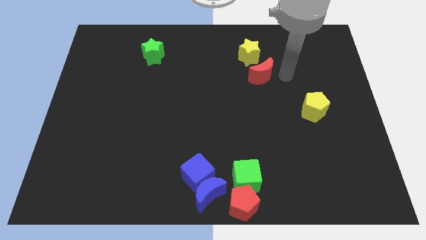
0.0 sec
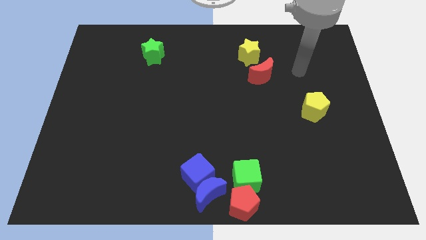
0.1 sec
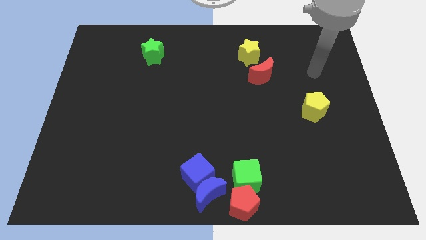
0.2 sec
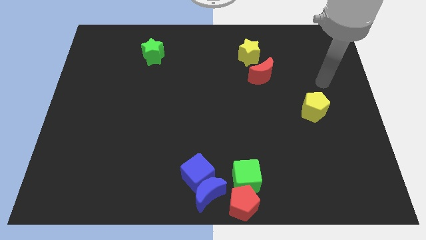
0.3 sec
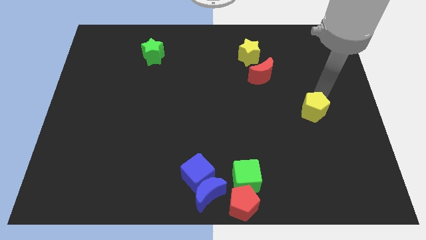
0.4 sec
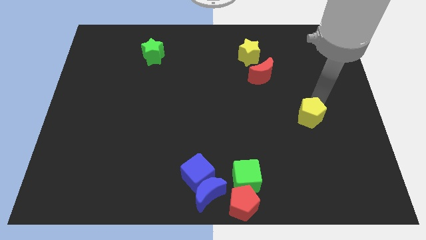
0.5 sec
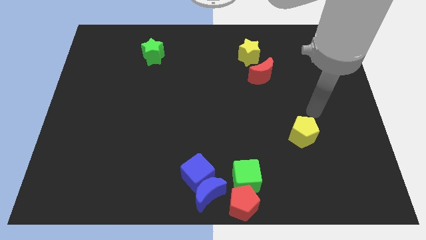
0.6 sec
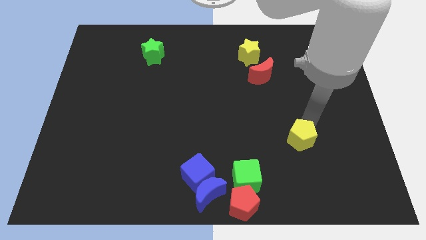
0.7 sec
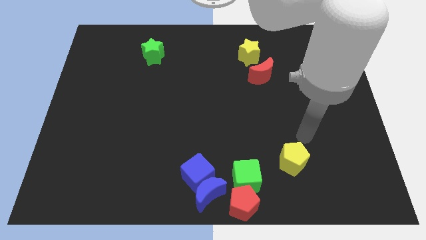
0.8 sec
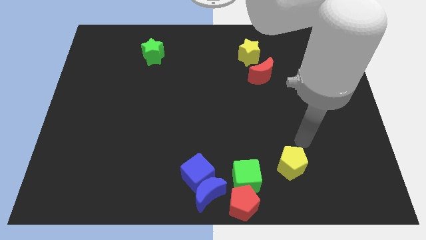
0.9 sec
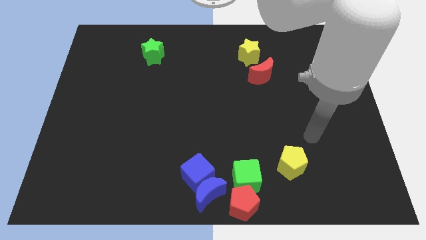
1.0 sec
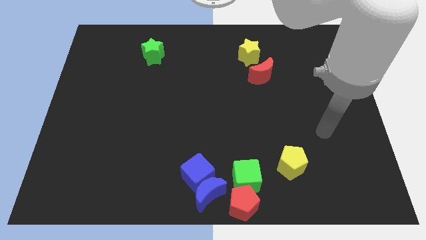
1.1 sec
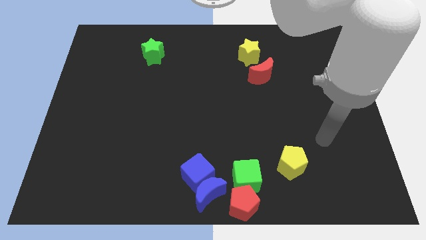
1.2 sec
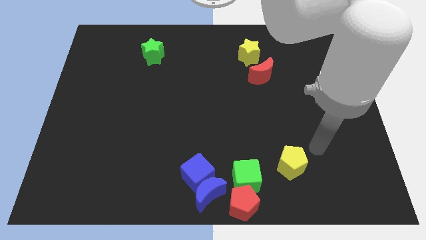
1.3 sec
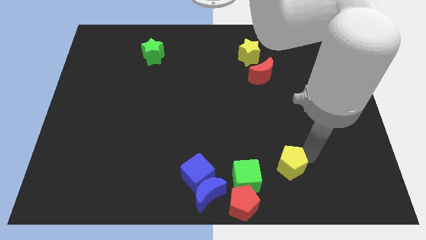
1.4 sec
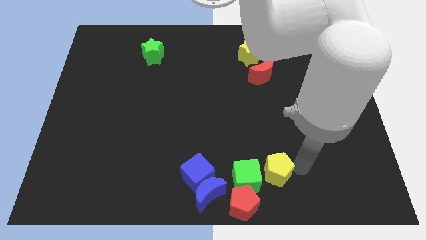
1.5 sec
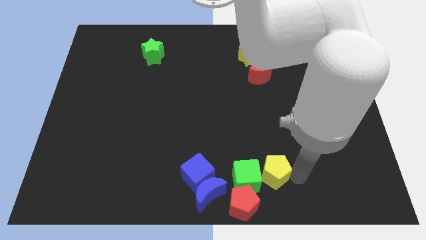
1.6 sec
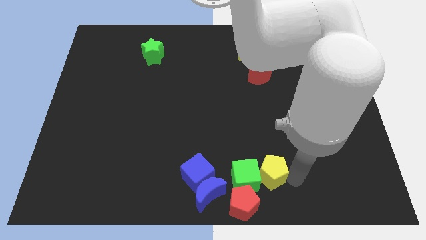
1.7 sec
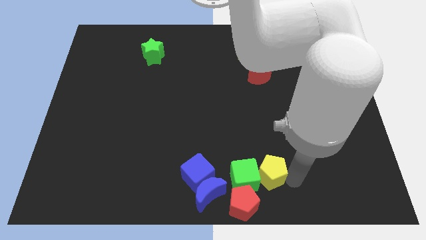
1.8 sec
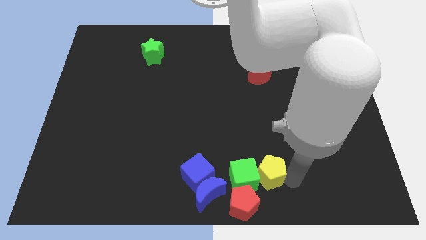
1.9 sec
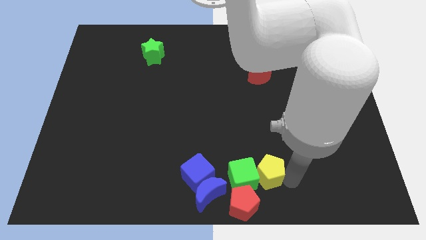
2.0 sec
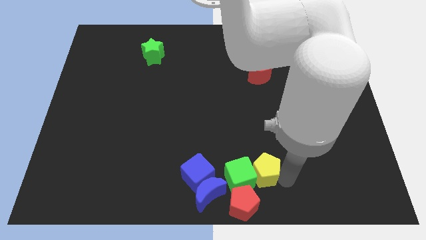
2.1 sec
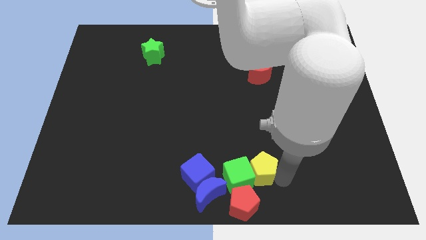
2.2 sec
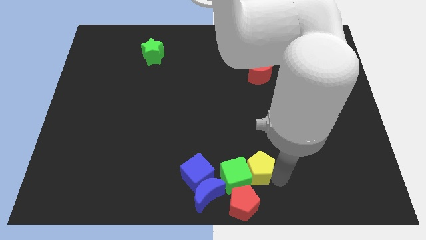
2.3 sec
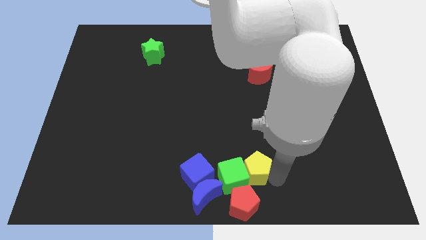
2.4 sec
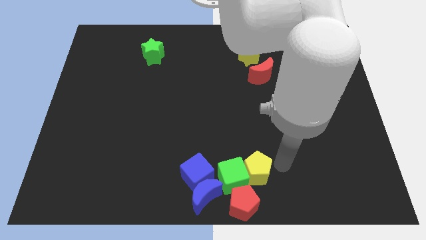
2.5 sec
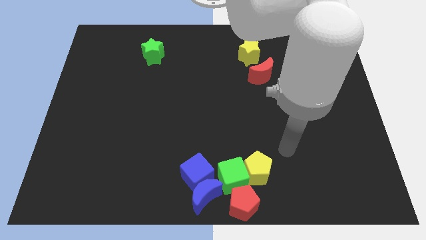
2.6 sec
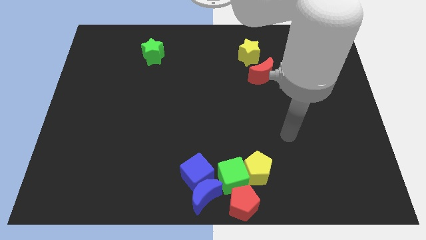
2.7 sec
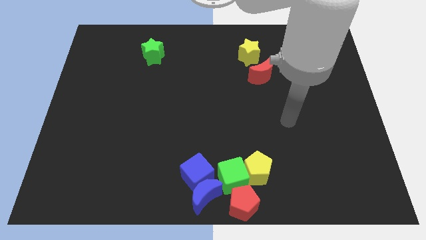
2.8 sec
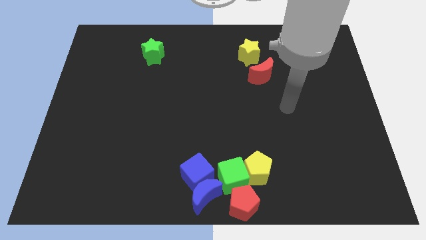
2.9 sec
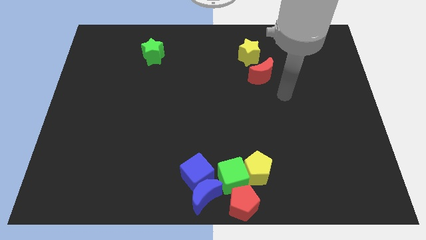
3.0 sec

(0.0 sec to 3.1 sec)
push the yellow pentagon into the right side of the green cube

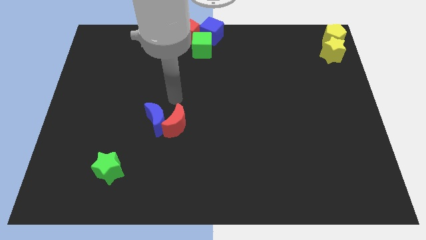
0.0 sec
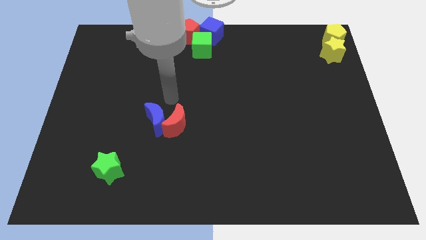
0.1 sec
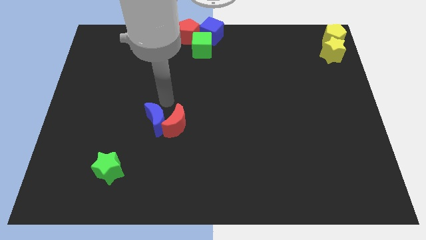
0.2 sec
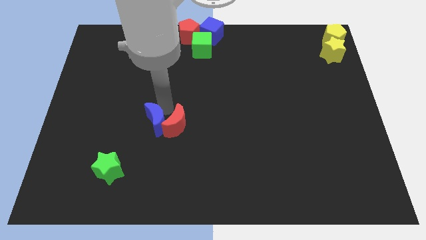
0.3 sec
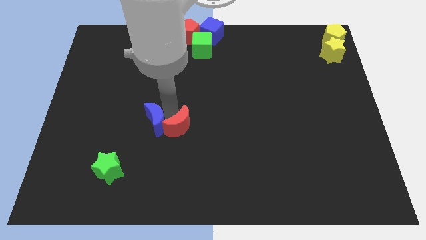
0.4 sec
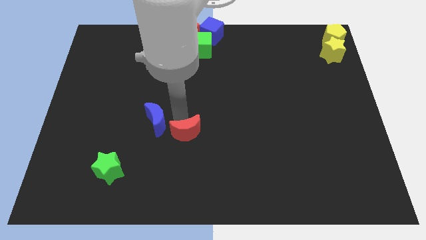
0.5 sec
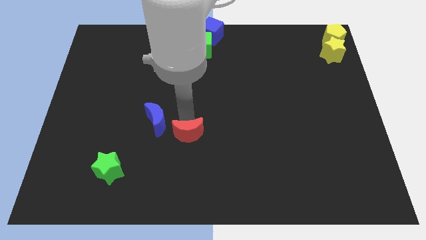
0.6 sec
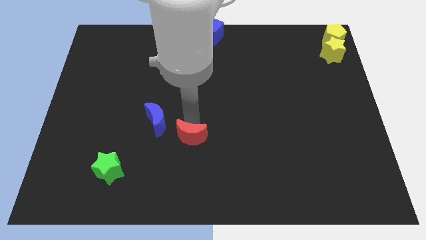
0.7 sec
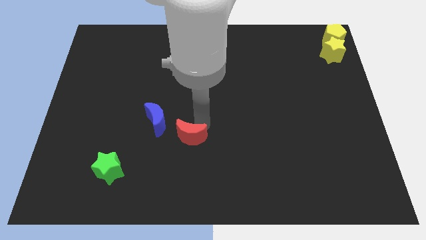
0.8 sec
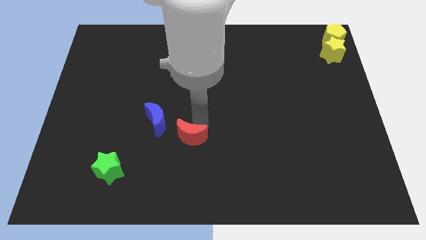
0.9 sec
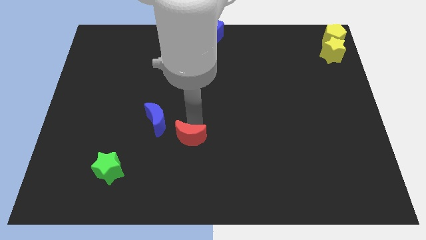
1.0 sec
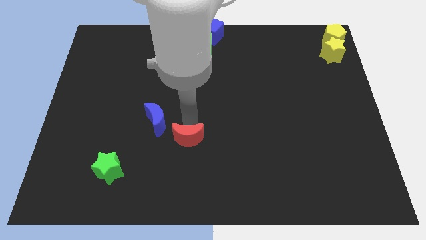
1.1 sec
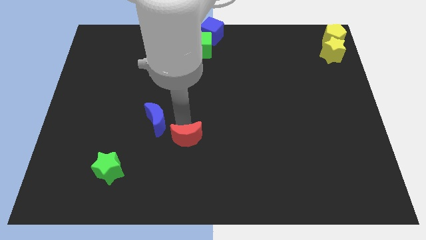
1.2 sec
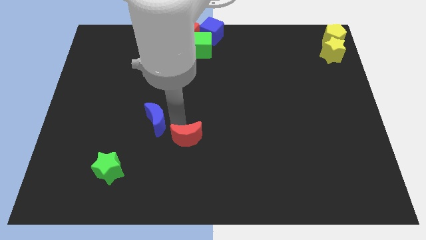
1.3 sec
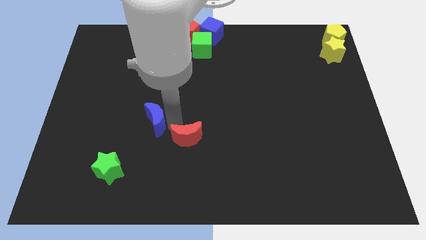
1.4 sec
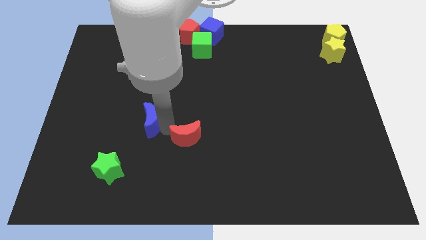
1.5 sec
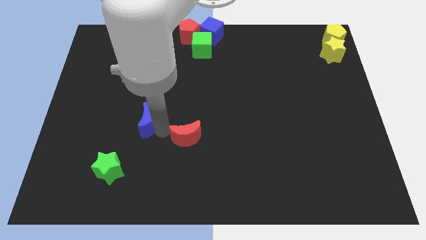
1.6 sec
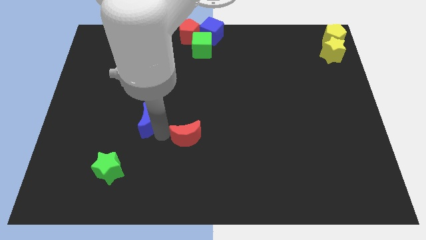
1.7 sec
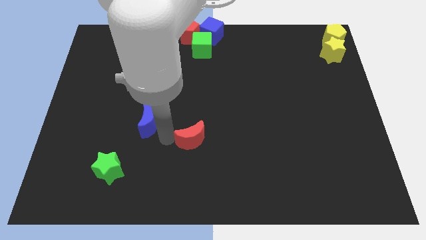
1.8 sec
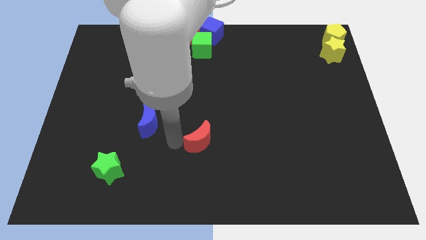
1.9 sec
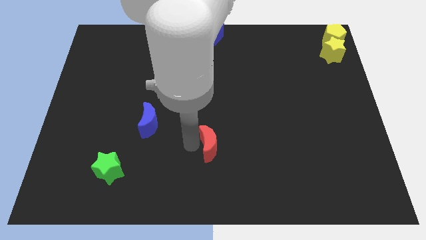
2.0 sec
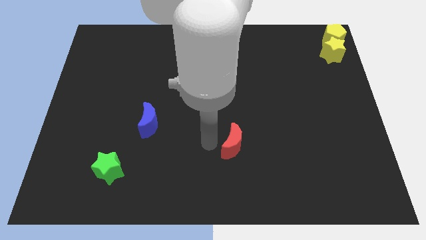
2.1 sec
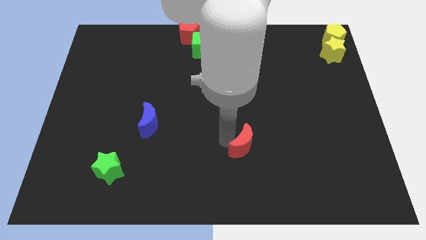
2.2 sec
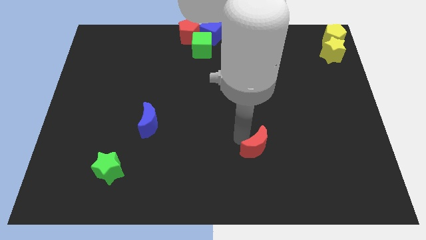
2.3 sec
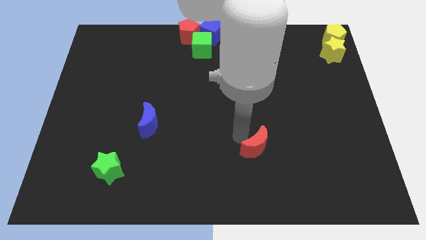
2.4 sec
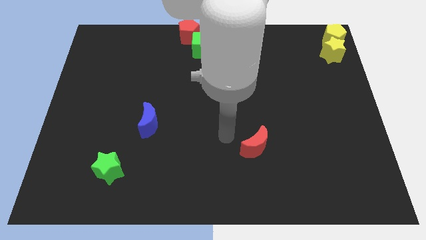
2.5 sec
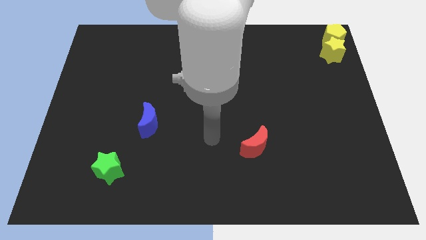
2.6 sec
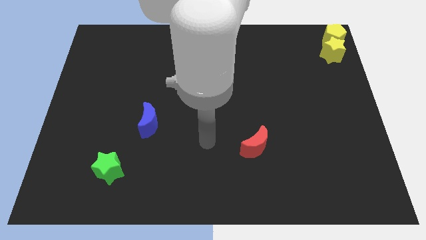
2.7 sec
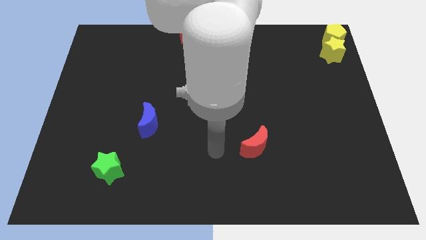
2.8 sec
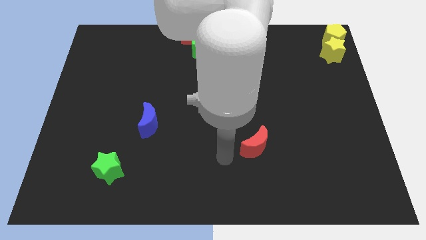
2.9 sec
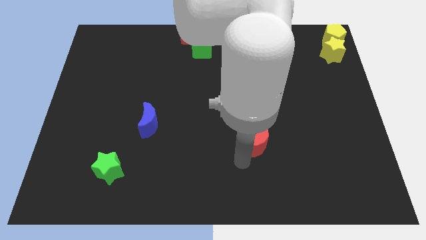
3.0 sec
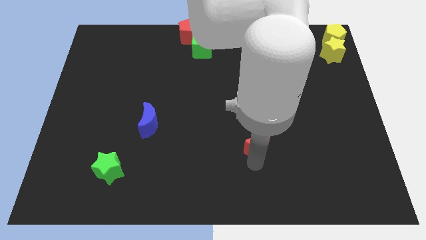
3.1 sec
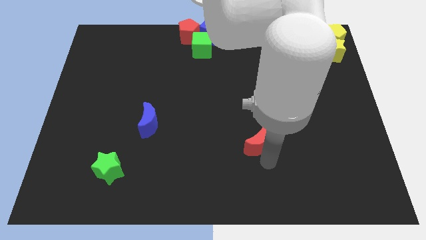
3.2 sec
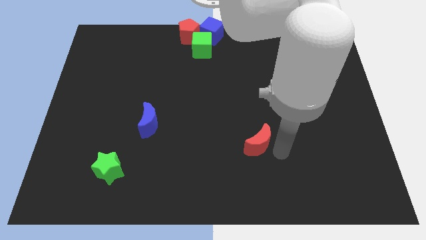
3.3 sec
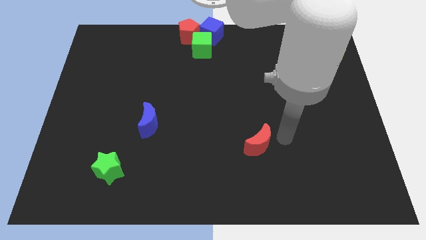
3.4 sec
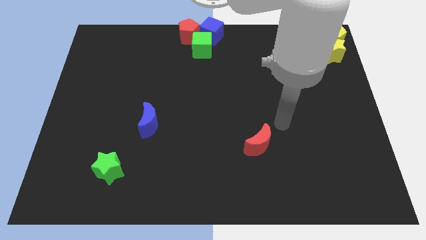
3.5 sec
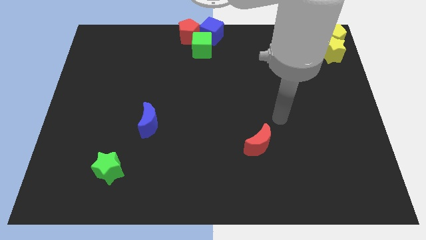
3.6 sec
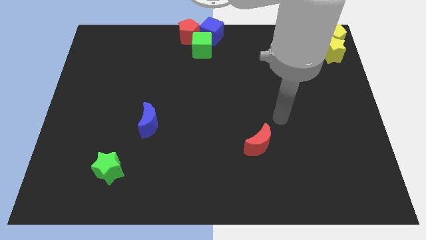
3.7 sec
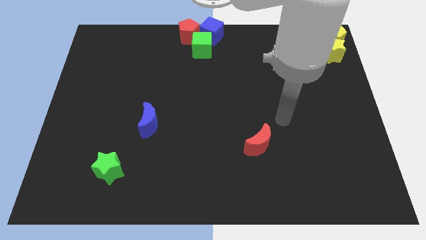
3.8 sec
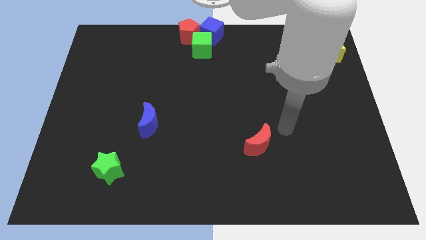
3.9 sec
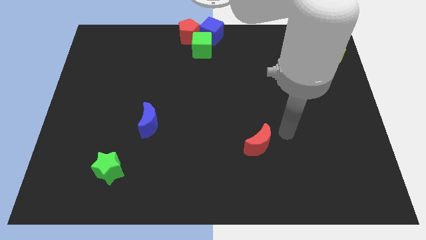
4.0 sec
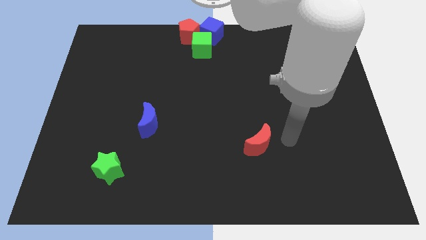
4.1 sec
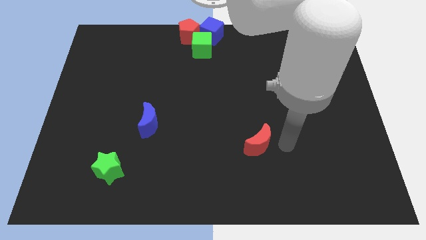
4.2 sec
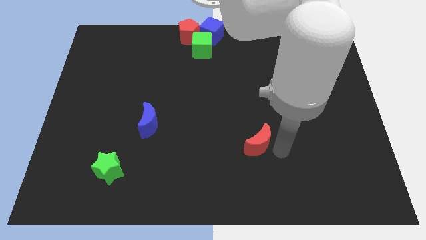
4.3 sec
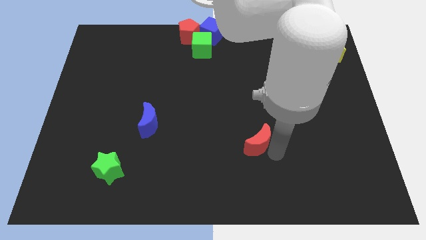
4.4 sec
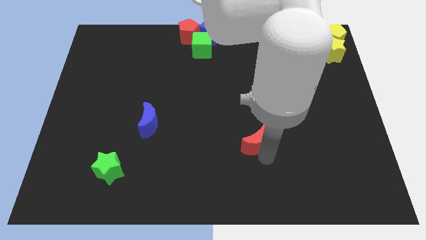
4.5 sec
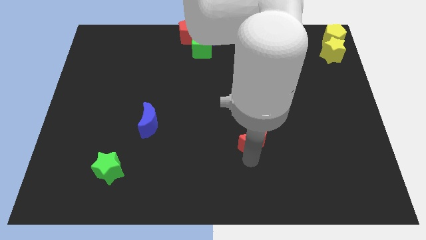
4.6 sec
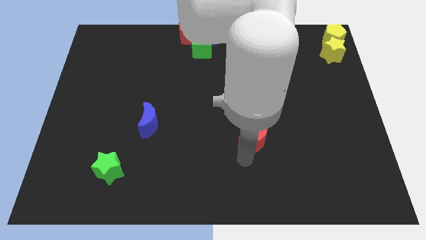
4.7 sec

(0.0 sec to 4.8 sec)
separate the red moon and blue moon

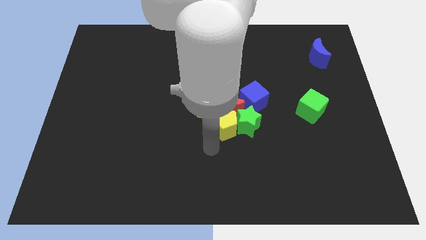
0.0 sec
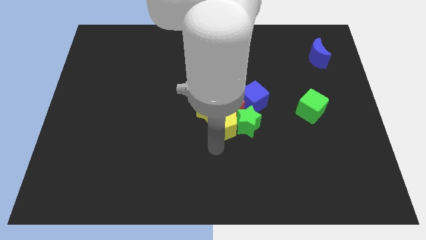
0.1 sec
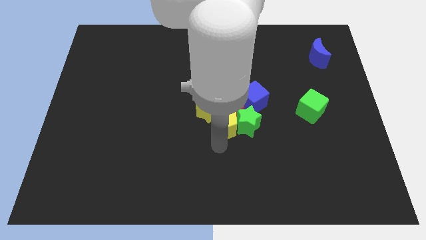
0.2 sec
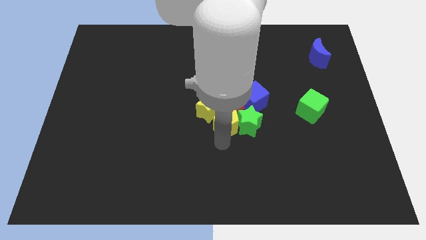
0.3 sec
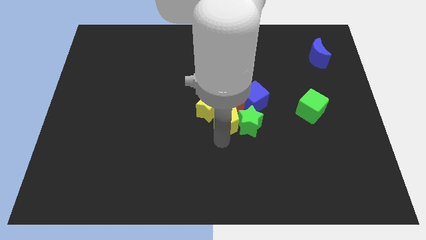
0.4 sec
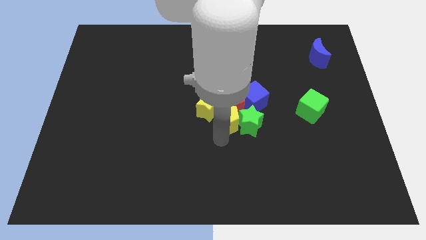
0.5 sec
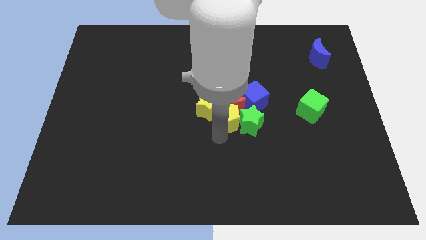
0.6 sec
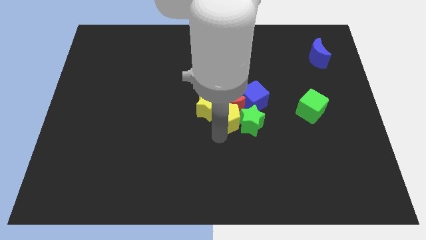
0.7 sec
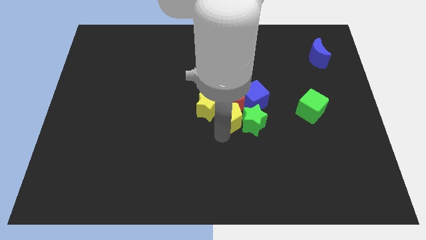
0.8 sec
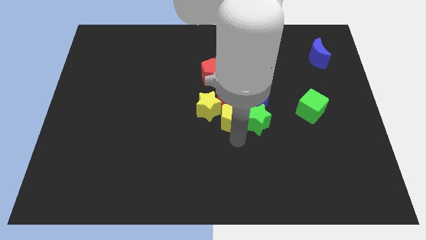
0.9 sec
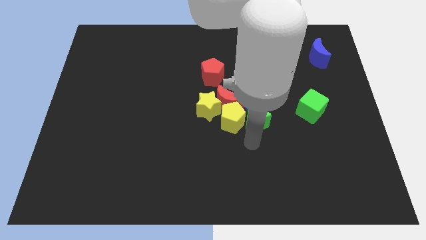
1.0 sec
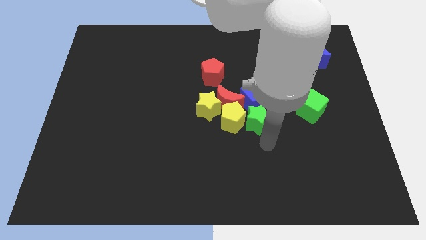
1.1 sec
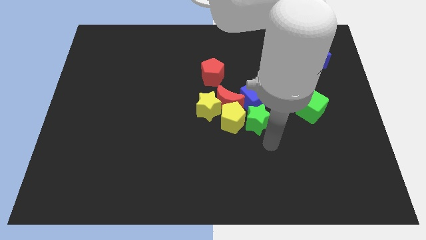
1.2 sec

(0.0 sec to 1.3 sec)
touch the bottom side of the yellow pentagon
